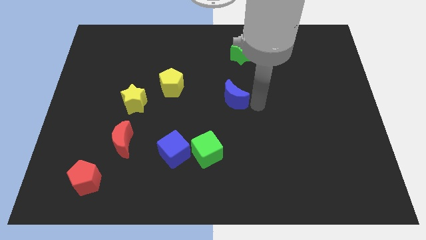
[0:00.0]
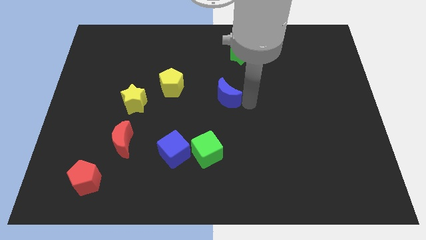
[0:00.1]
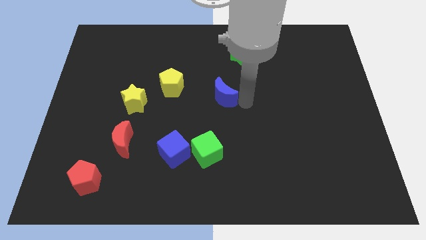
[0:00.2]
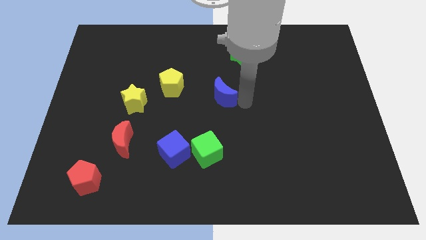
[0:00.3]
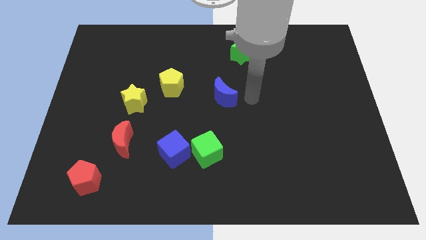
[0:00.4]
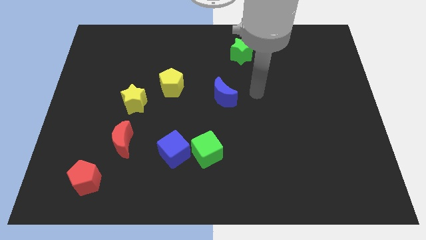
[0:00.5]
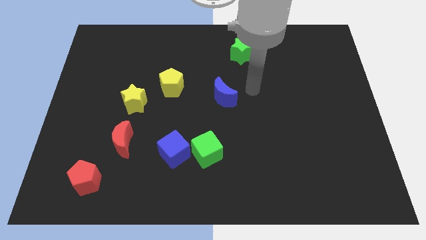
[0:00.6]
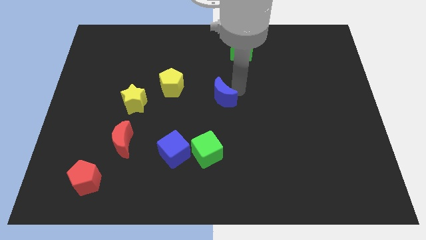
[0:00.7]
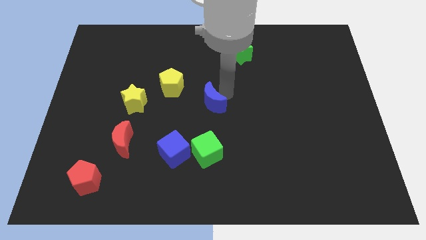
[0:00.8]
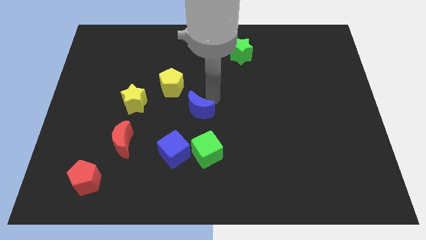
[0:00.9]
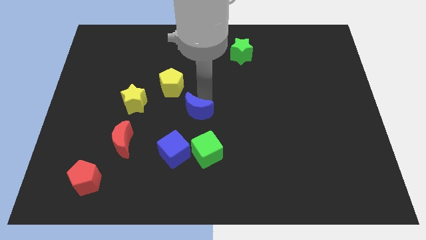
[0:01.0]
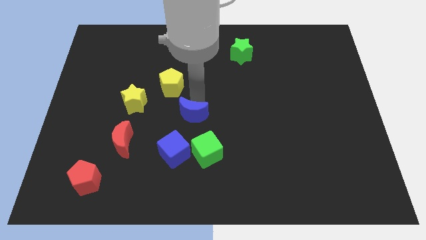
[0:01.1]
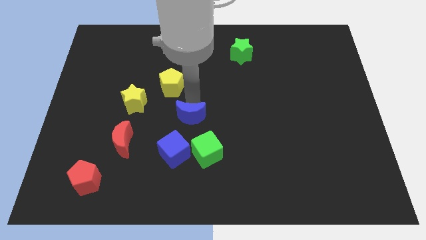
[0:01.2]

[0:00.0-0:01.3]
move the blue moon to the centre

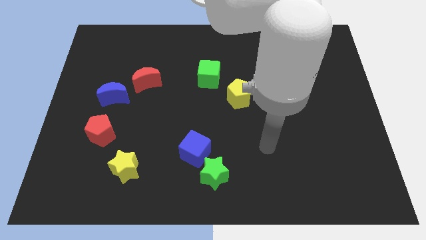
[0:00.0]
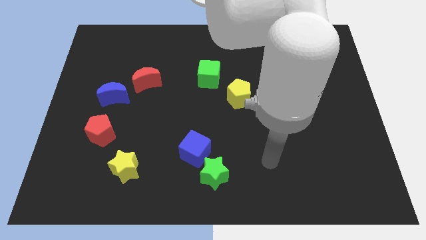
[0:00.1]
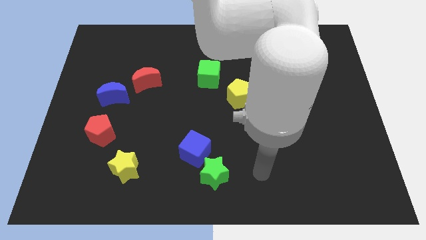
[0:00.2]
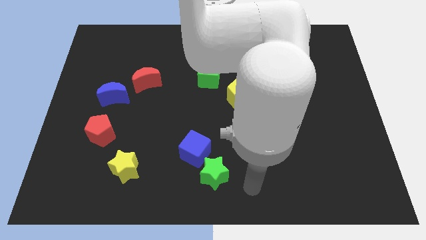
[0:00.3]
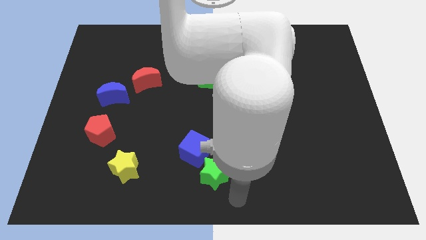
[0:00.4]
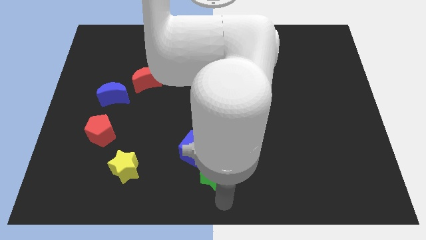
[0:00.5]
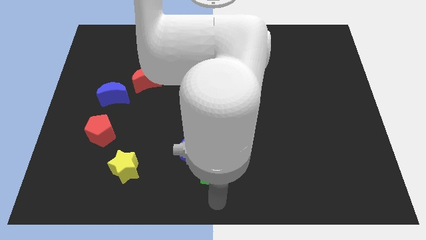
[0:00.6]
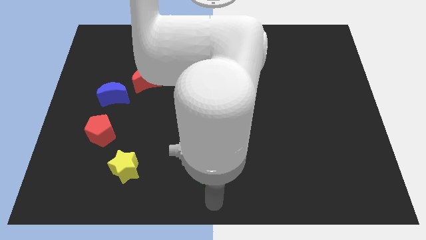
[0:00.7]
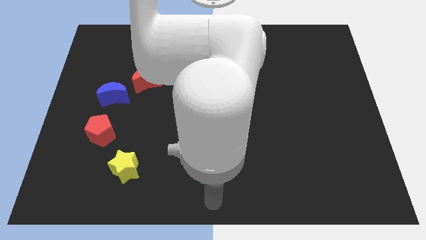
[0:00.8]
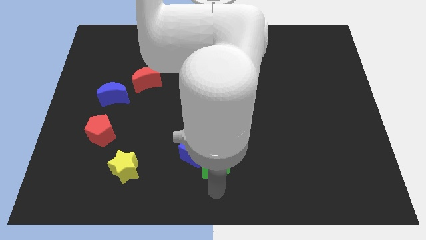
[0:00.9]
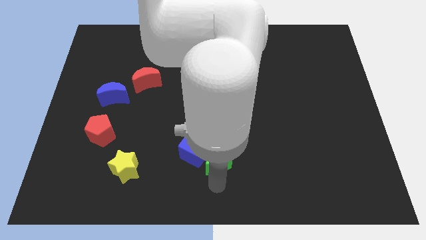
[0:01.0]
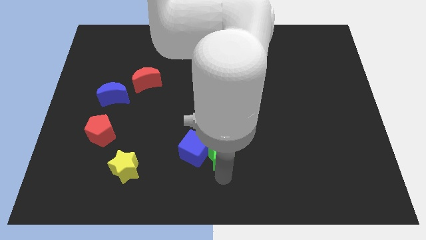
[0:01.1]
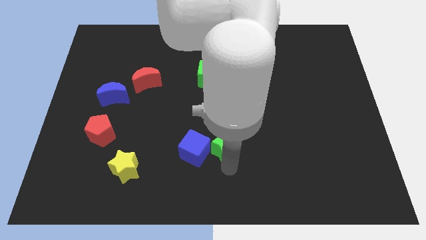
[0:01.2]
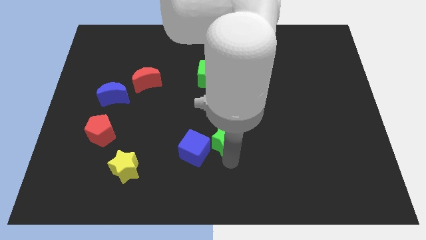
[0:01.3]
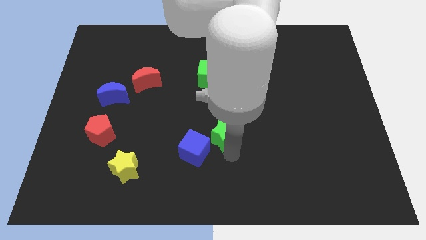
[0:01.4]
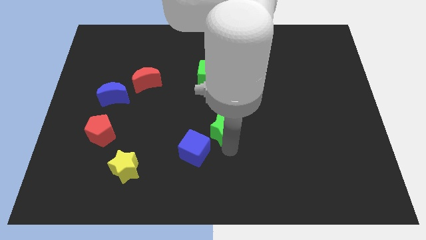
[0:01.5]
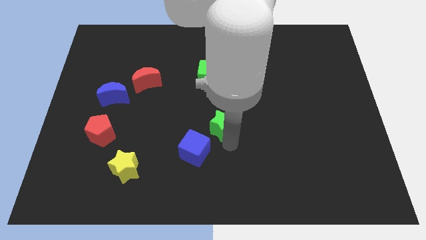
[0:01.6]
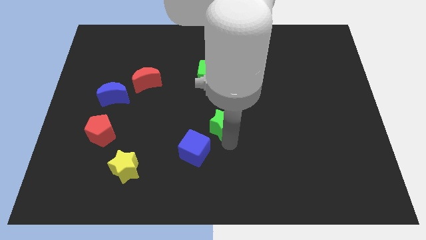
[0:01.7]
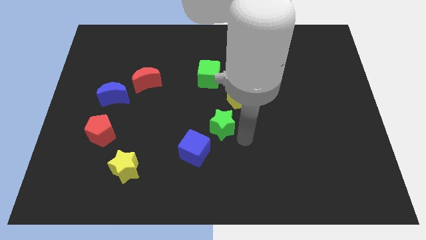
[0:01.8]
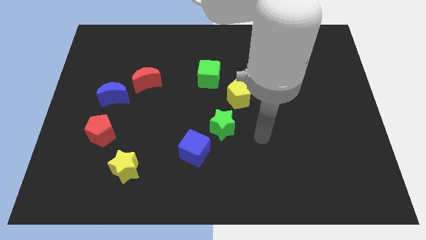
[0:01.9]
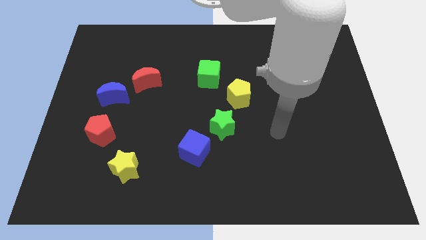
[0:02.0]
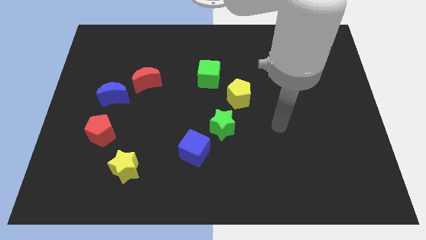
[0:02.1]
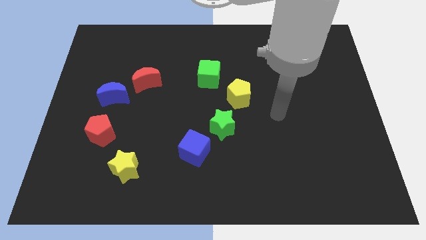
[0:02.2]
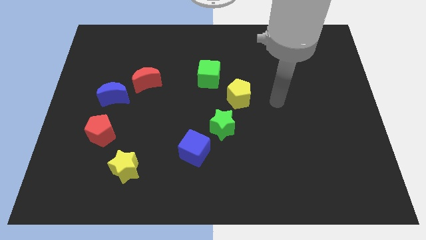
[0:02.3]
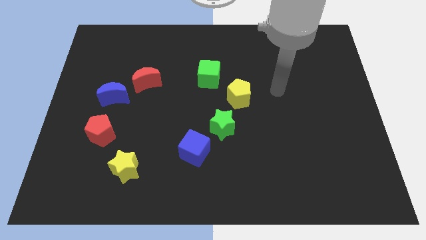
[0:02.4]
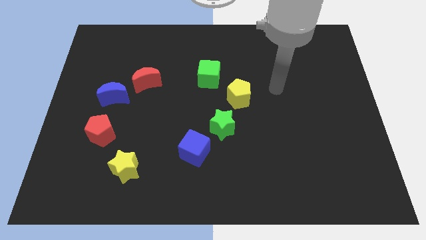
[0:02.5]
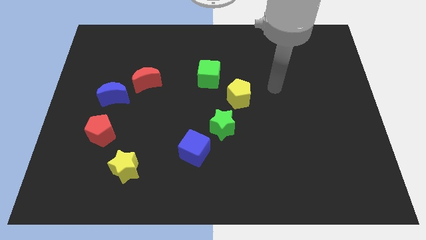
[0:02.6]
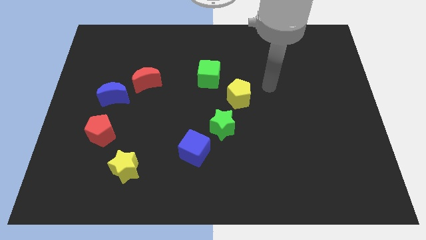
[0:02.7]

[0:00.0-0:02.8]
place the green star in between blue cube and yellow pentagon

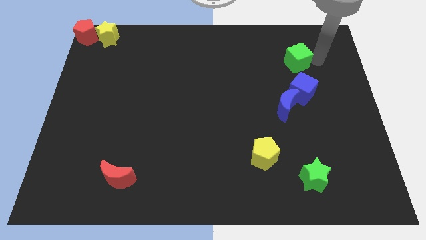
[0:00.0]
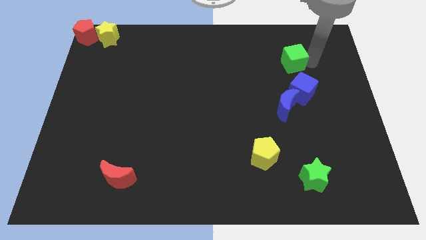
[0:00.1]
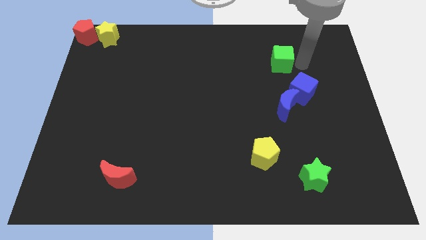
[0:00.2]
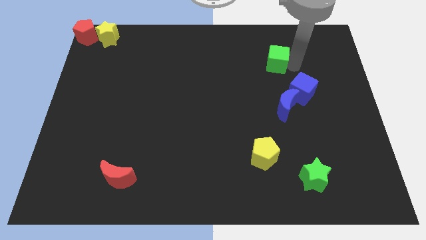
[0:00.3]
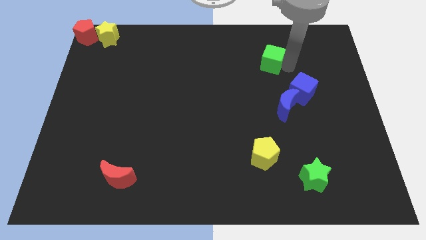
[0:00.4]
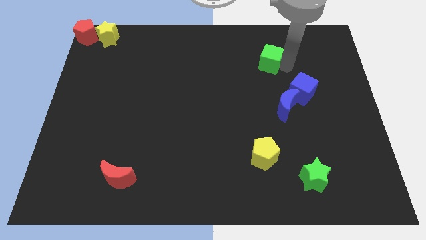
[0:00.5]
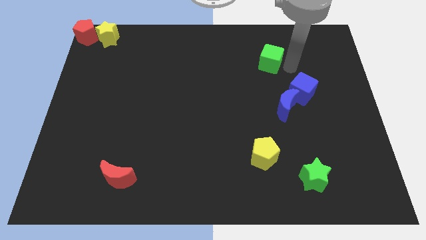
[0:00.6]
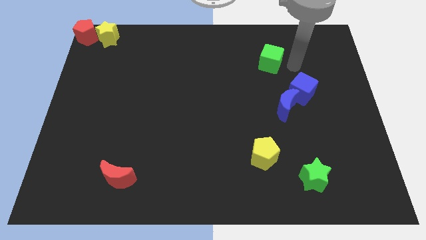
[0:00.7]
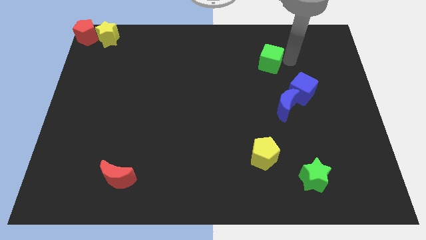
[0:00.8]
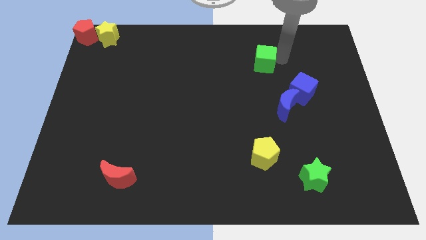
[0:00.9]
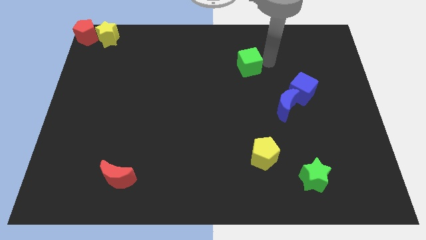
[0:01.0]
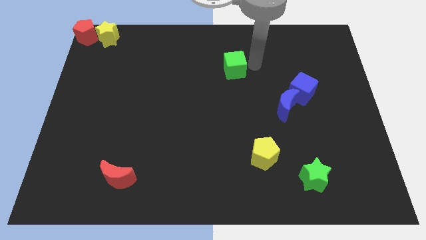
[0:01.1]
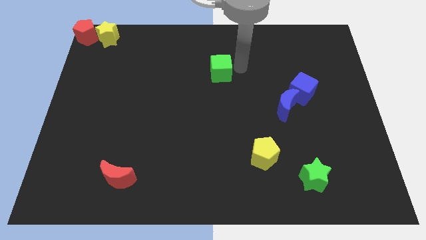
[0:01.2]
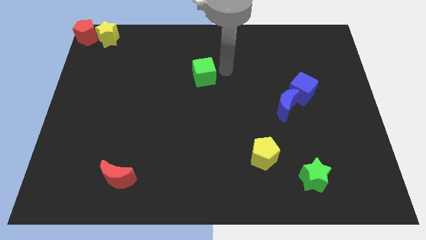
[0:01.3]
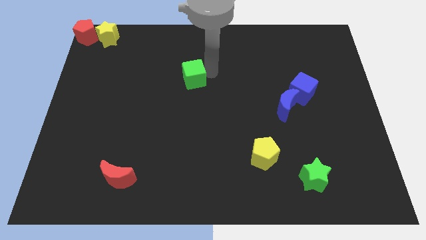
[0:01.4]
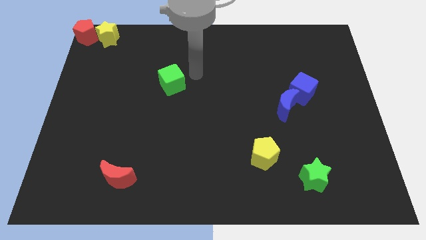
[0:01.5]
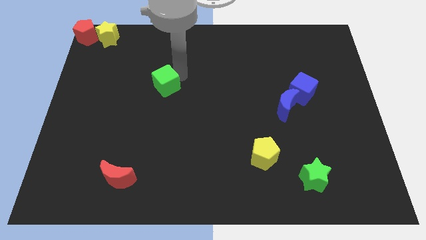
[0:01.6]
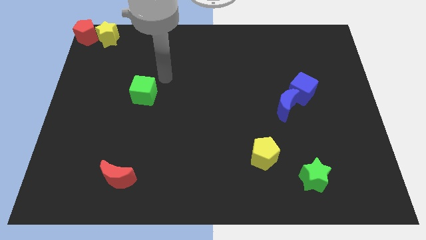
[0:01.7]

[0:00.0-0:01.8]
move the green cube away from the blue blocks

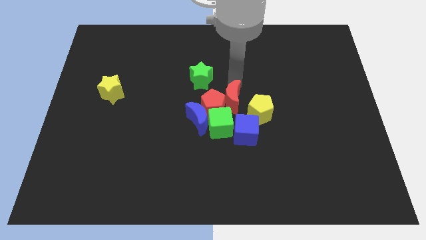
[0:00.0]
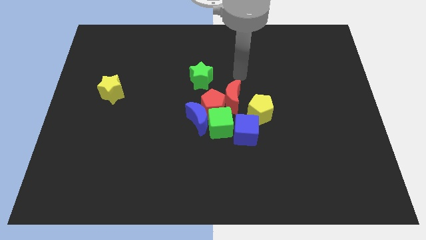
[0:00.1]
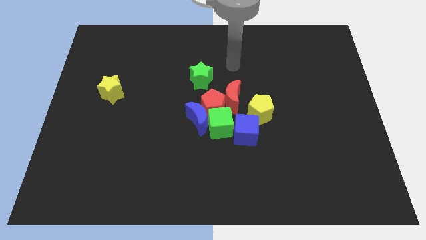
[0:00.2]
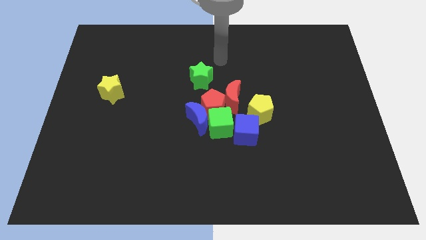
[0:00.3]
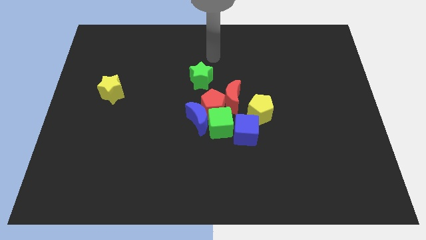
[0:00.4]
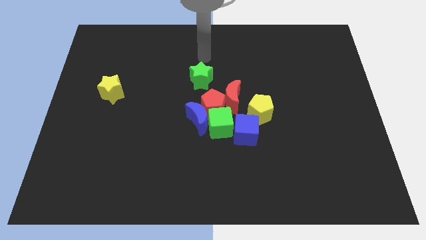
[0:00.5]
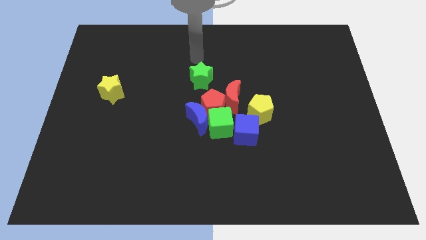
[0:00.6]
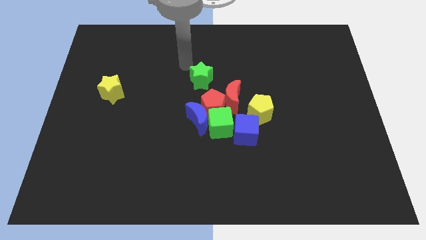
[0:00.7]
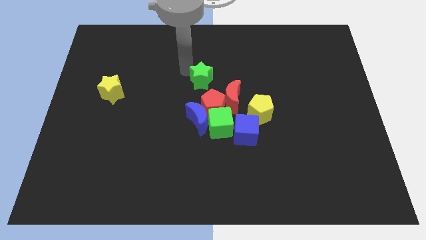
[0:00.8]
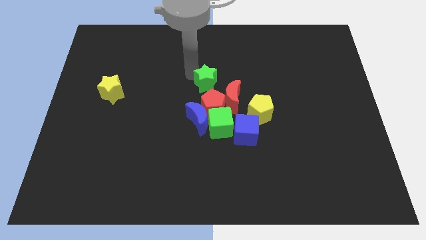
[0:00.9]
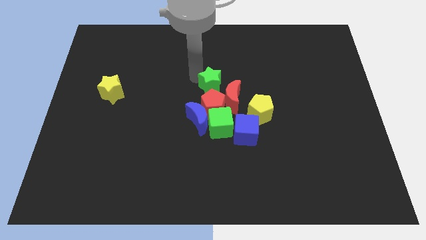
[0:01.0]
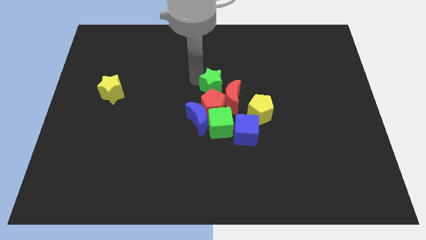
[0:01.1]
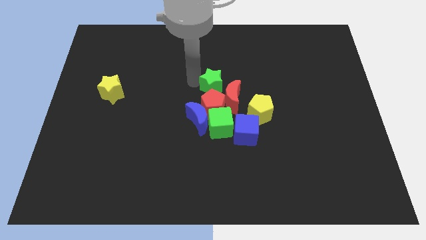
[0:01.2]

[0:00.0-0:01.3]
move the green star to the top of the red pentagon

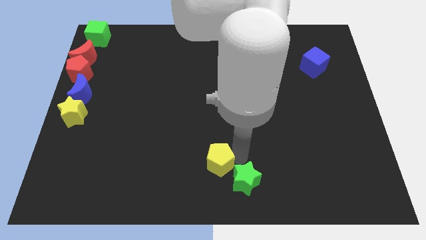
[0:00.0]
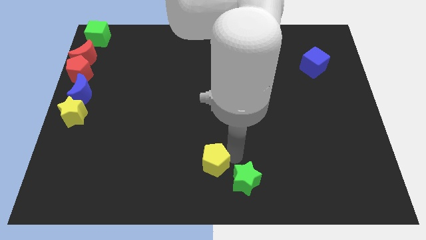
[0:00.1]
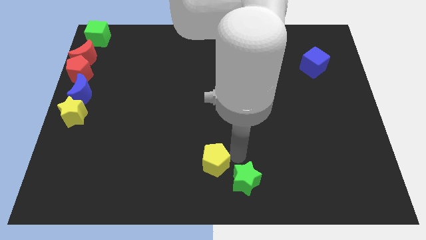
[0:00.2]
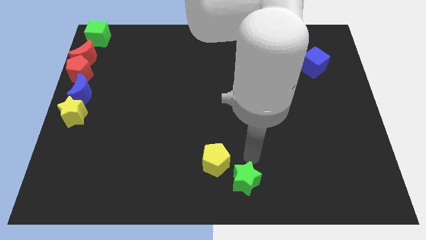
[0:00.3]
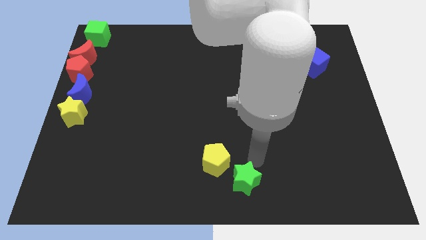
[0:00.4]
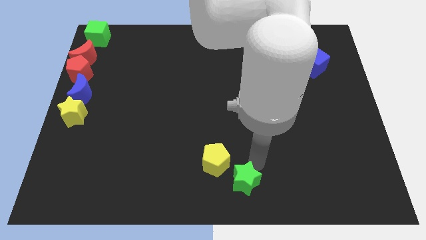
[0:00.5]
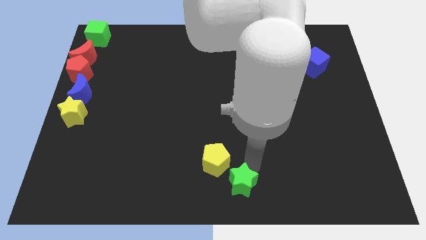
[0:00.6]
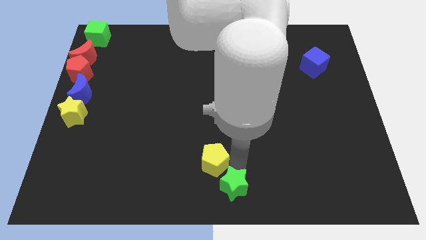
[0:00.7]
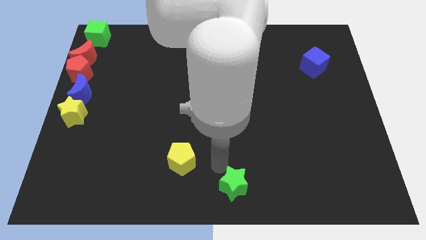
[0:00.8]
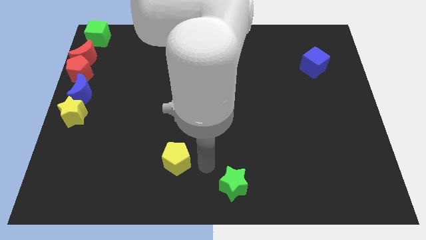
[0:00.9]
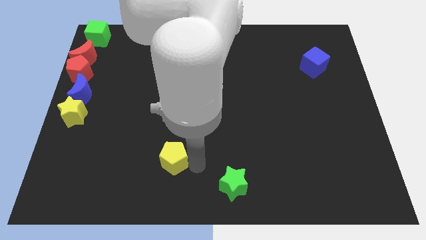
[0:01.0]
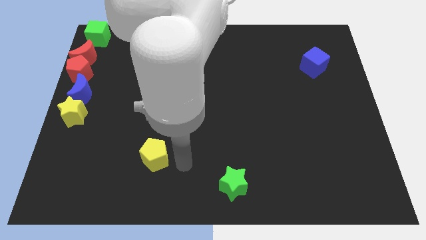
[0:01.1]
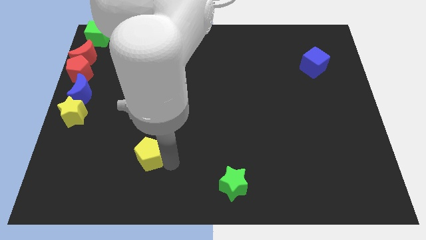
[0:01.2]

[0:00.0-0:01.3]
separate the green star and the yellow pentagon

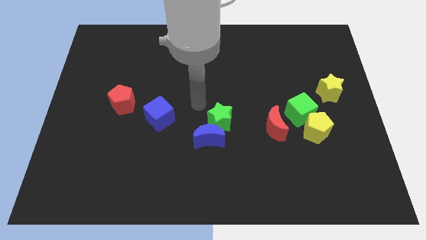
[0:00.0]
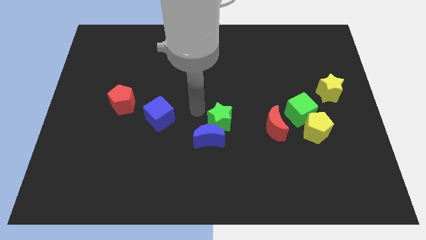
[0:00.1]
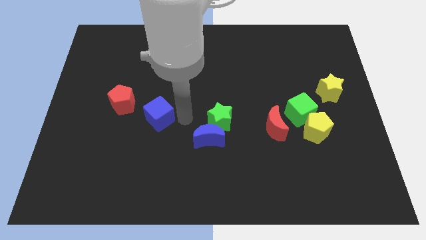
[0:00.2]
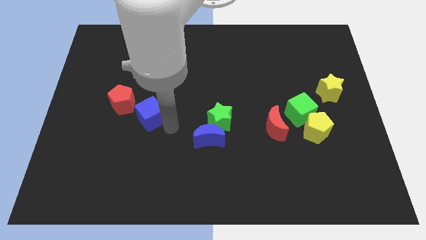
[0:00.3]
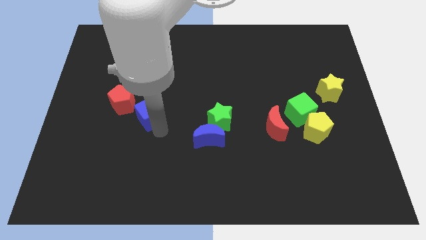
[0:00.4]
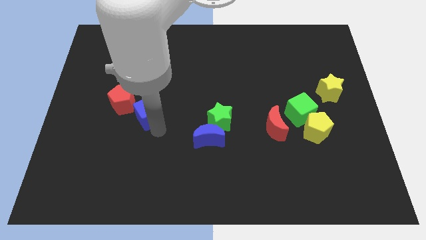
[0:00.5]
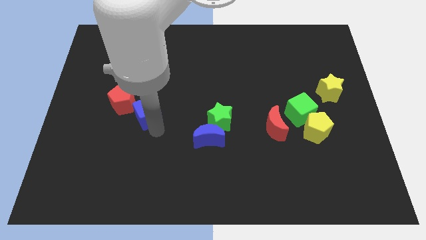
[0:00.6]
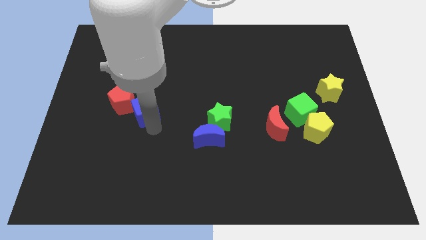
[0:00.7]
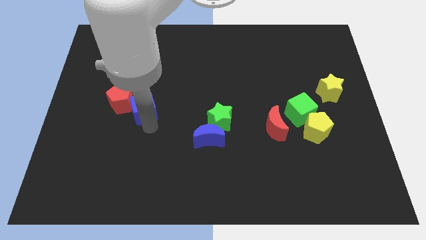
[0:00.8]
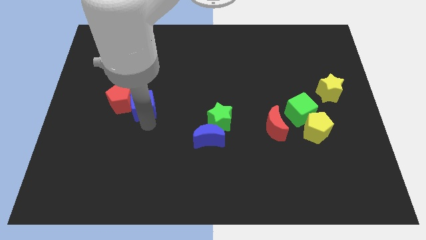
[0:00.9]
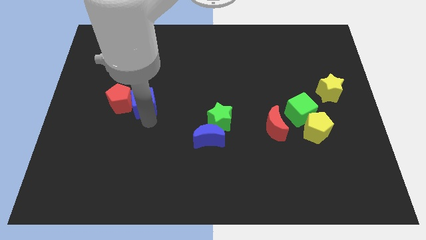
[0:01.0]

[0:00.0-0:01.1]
push blue cube into red pentagon
